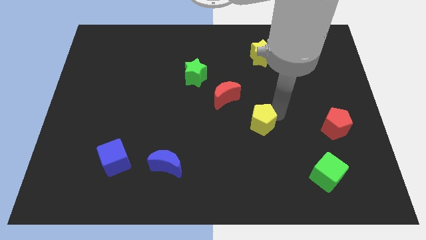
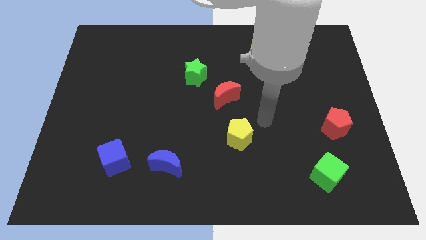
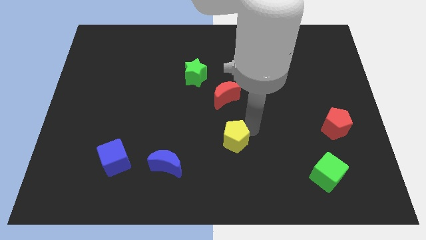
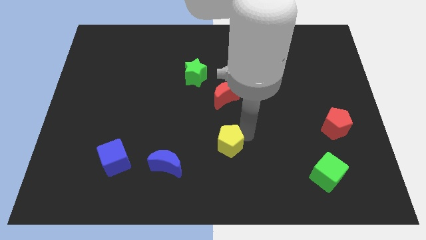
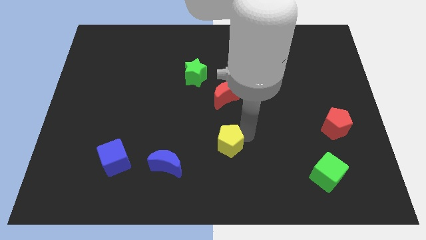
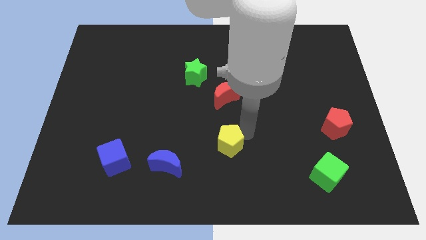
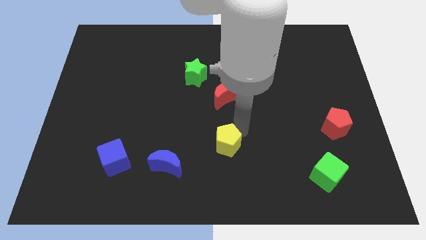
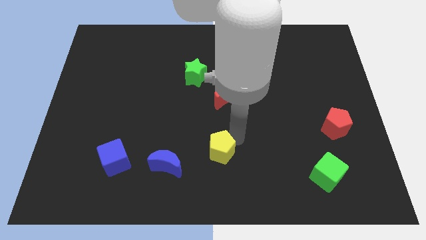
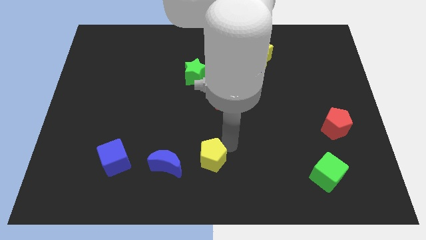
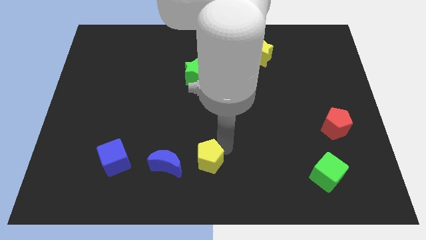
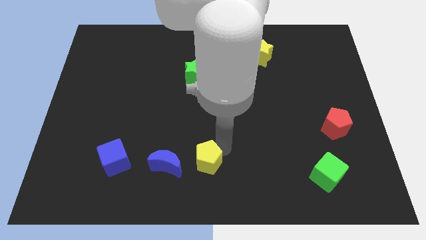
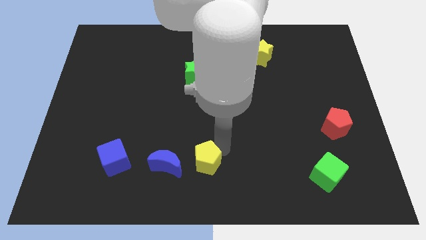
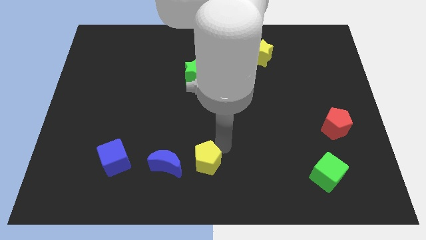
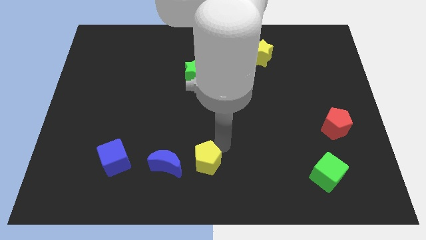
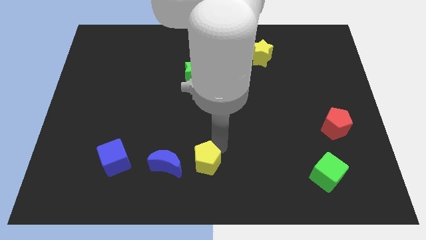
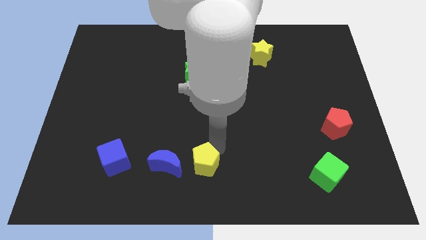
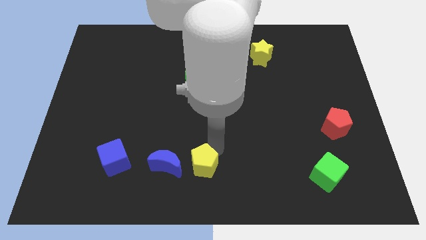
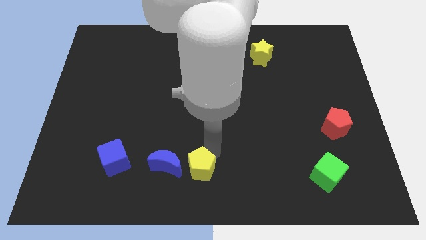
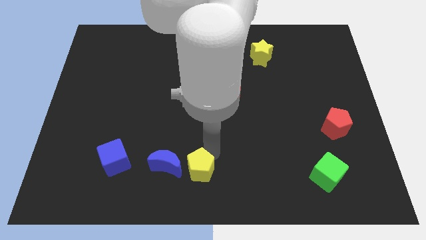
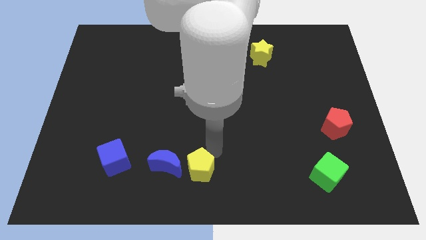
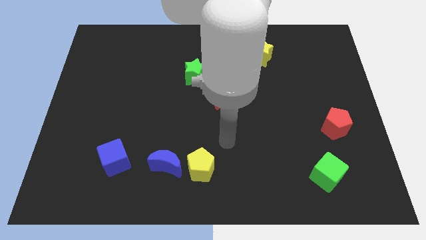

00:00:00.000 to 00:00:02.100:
move the yellow pentagon towards the right side of the blue moon

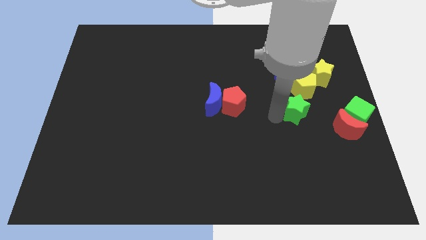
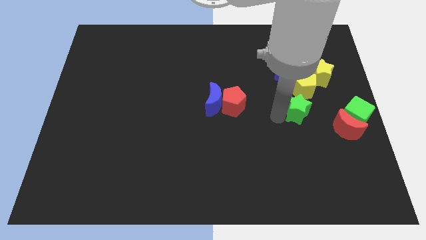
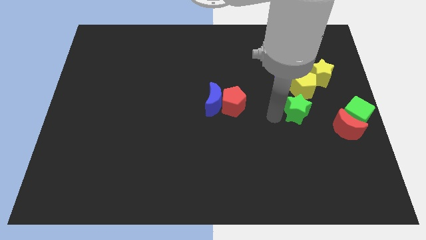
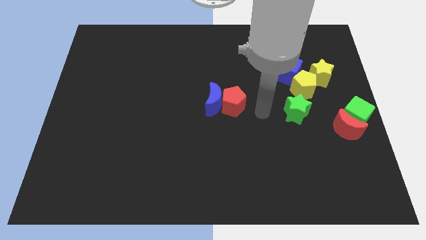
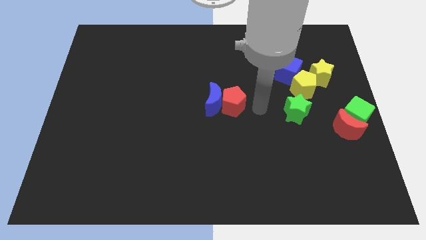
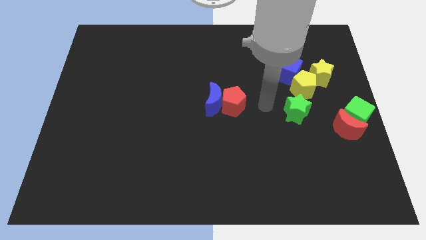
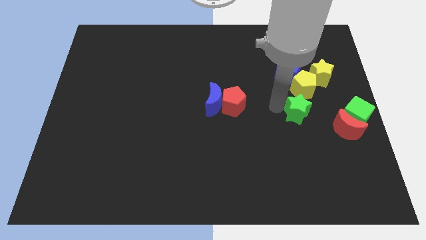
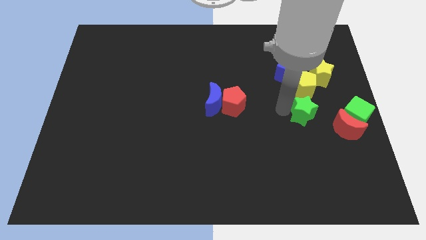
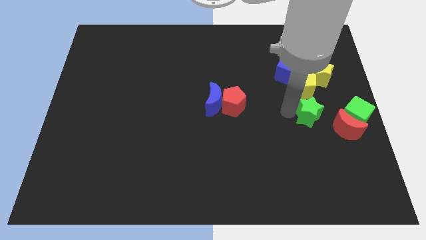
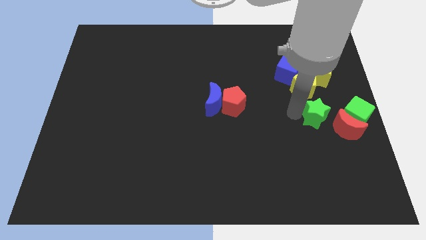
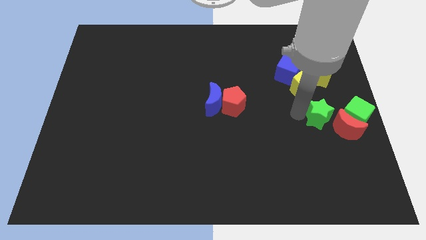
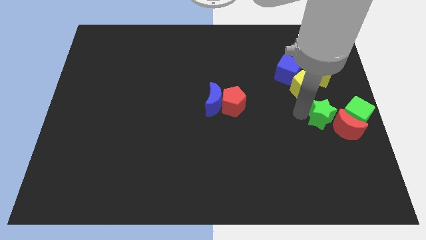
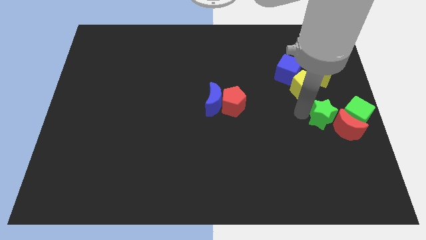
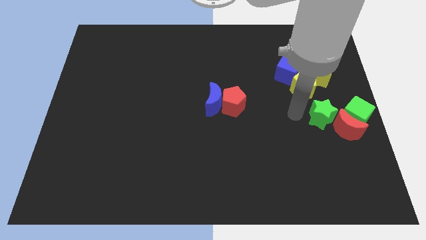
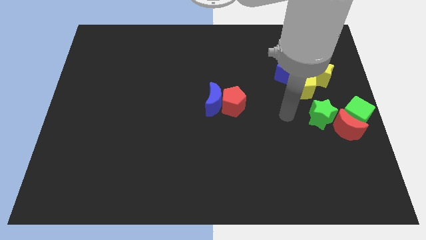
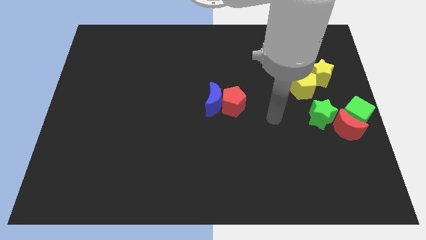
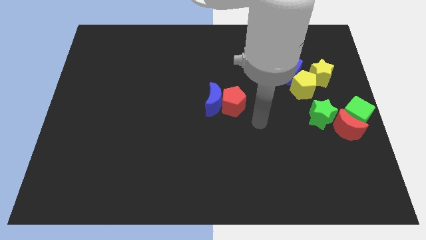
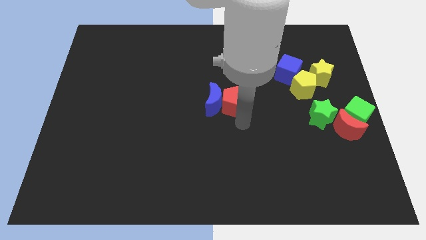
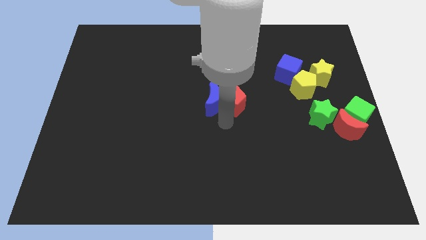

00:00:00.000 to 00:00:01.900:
move the green star towards the red crescent

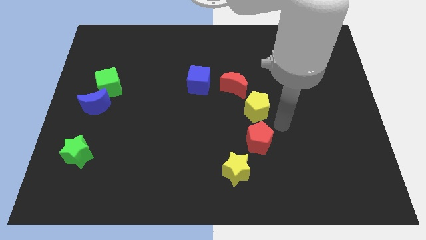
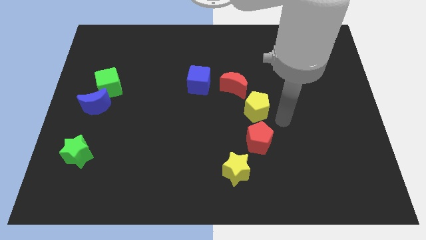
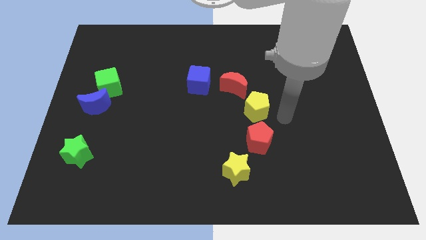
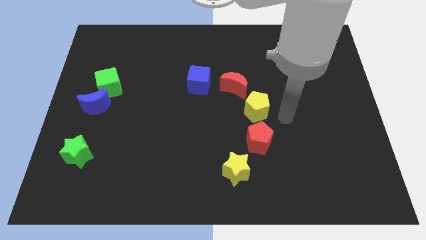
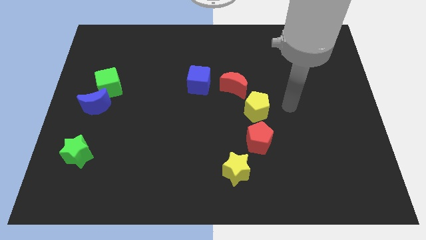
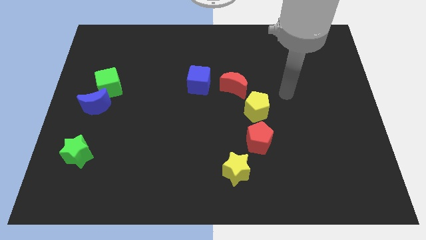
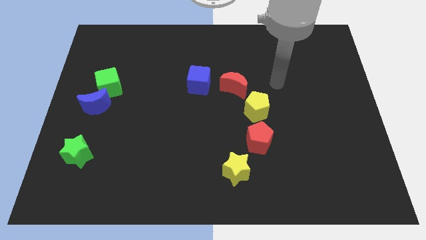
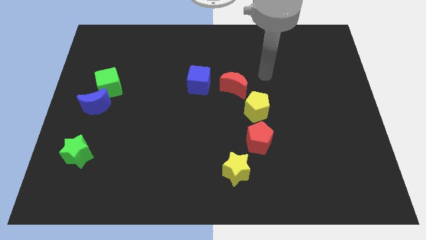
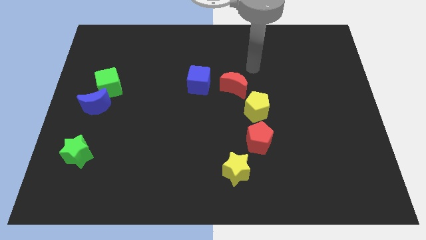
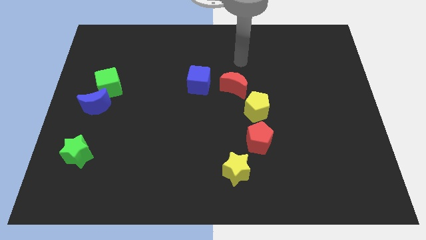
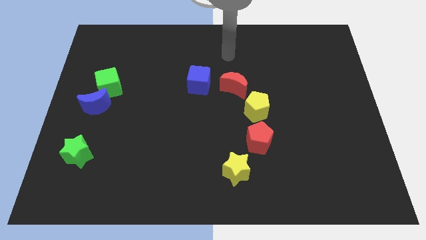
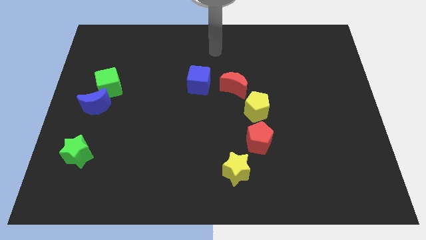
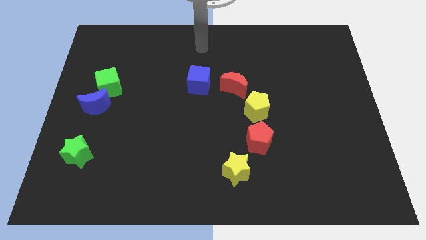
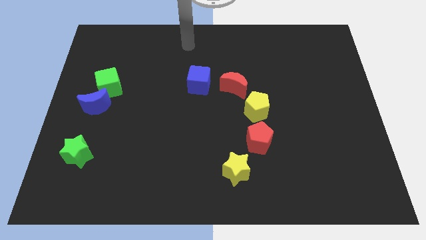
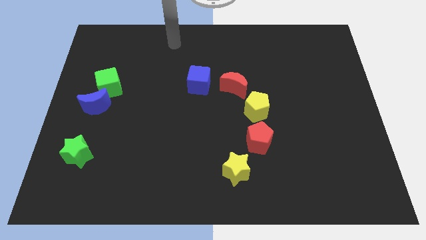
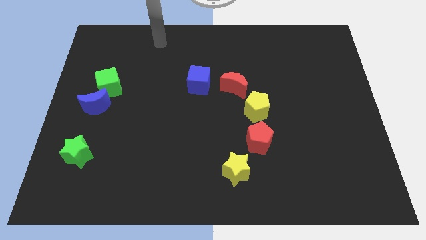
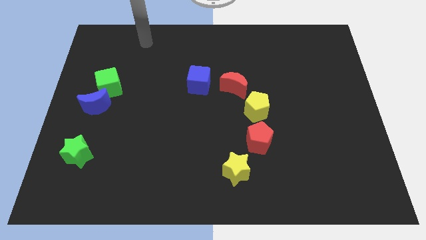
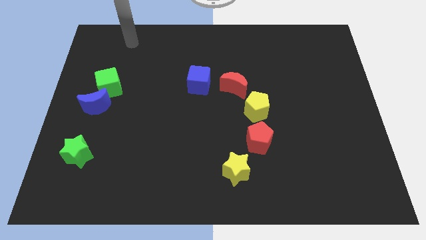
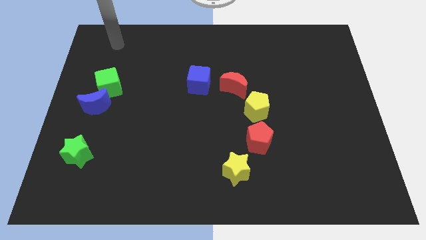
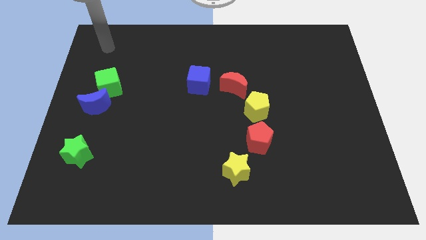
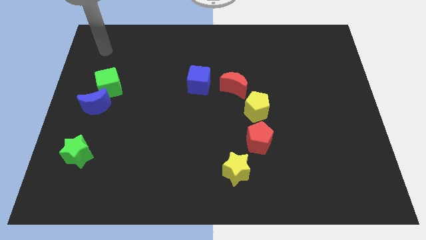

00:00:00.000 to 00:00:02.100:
move your arm towards the green cube

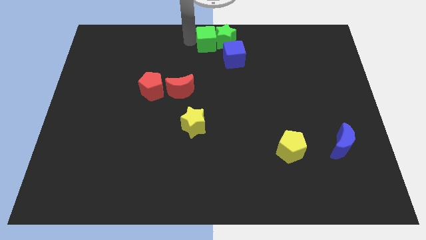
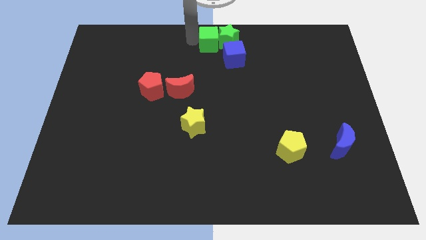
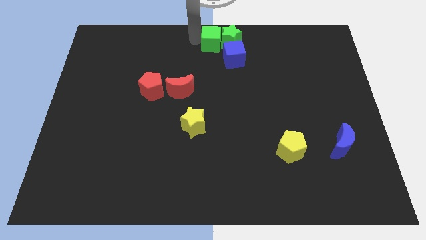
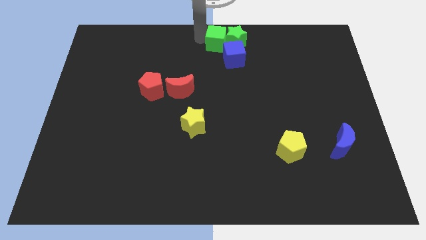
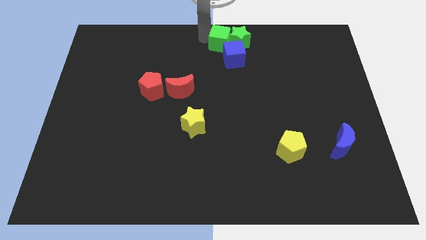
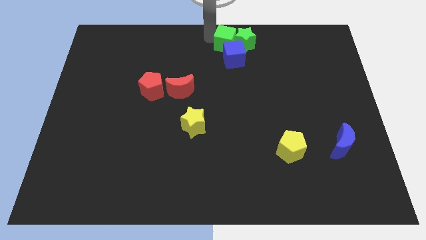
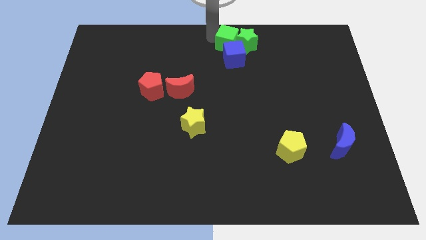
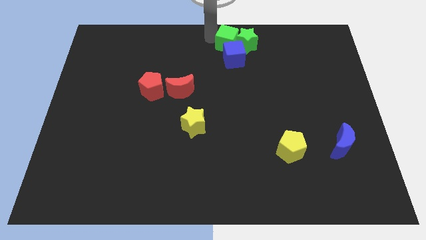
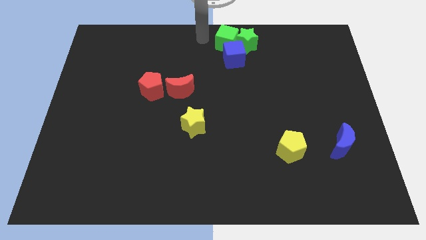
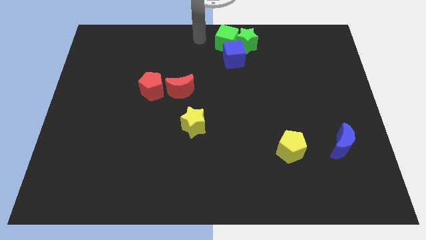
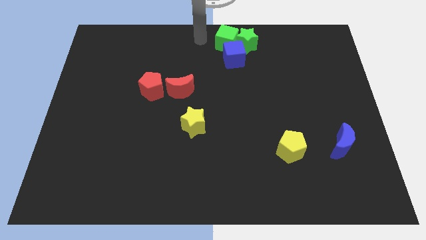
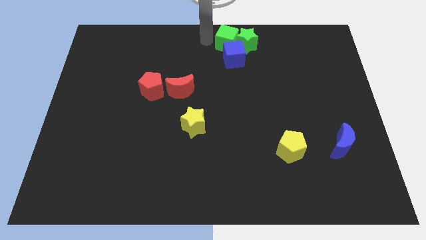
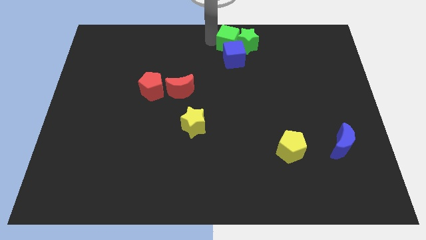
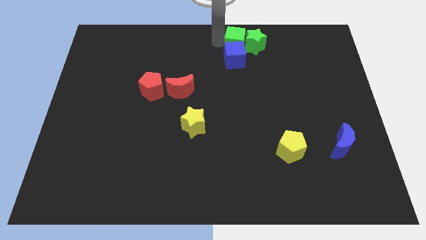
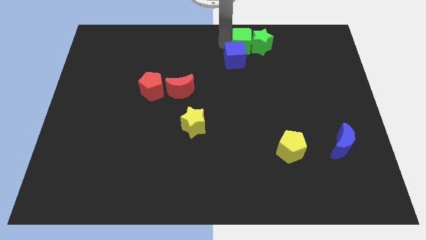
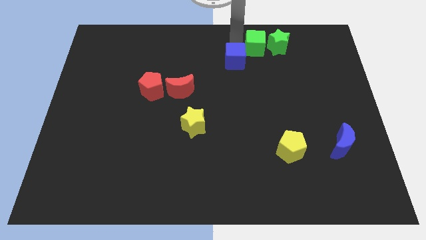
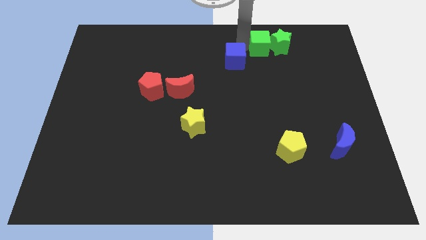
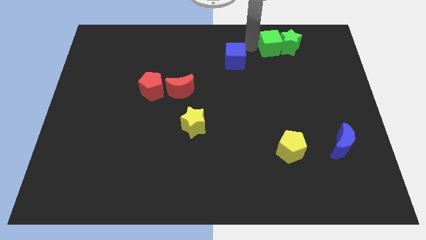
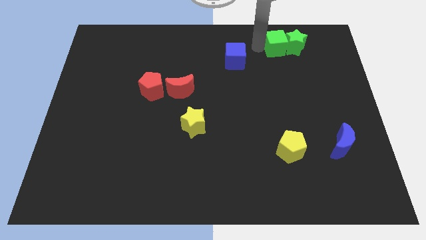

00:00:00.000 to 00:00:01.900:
push the green blocks to the top right corner

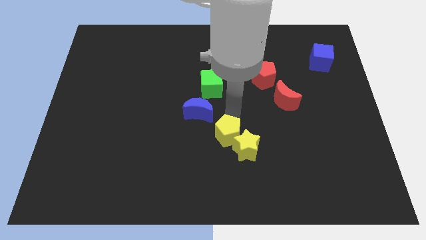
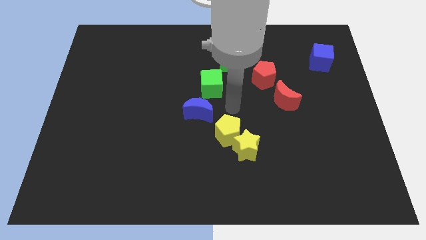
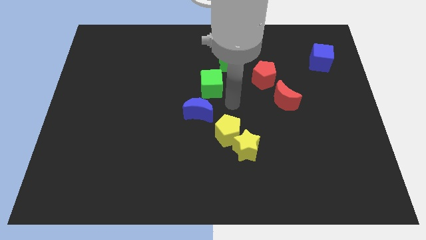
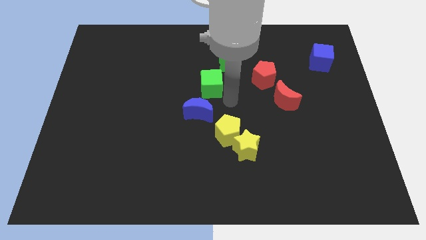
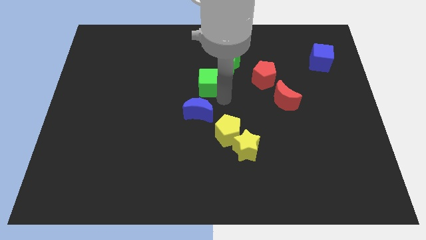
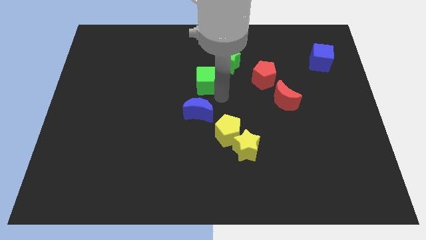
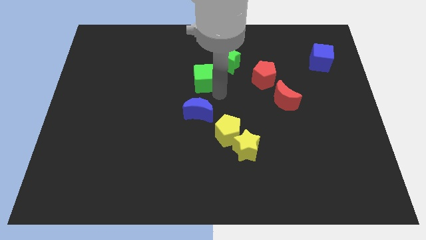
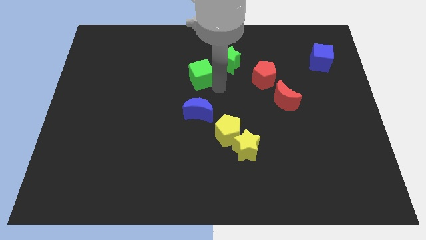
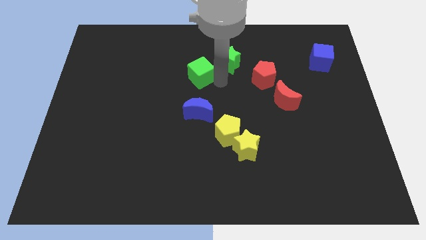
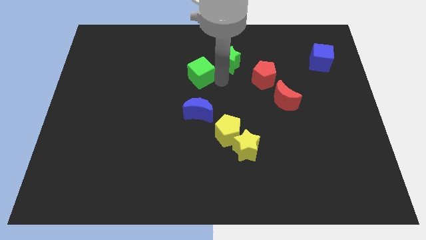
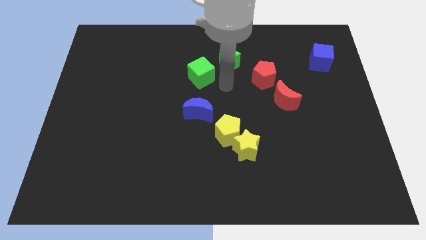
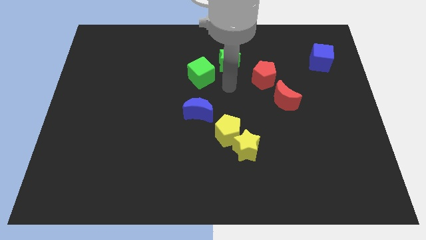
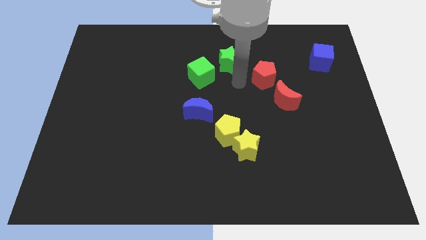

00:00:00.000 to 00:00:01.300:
move your arm away from the yellow pentagon
